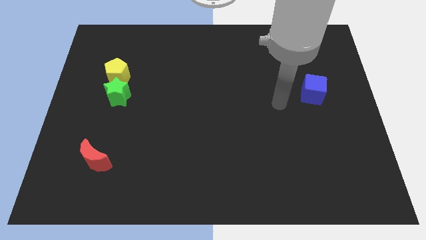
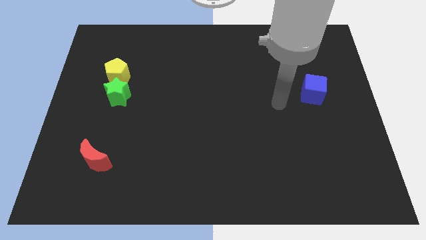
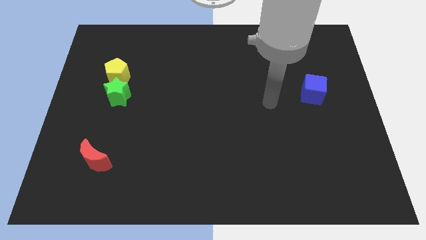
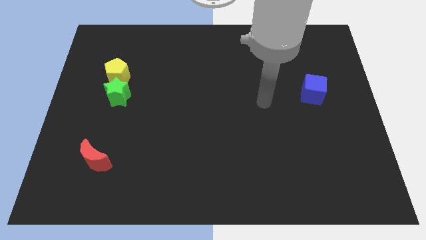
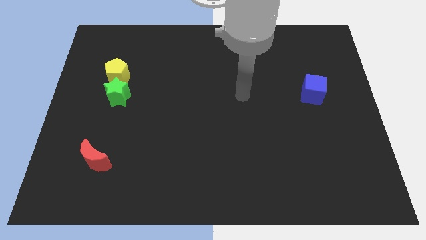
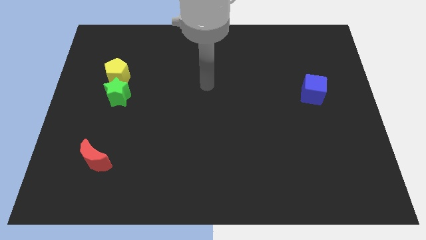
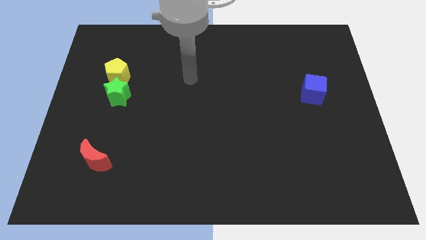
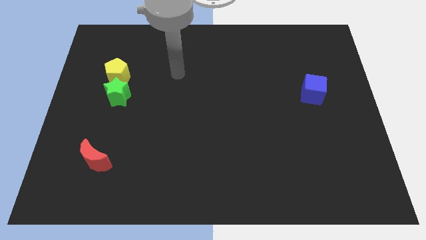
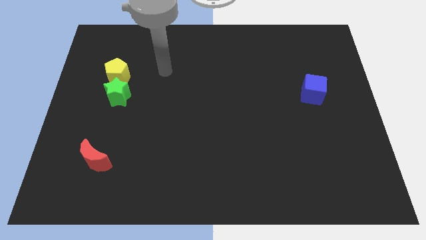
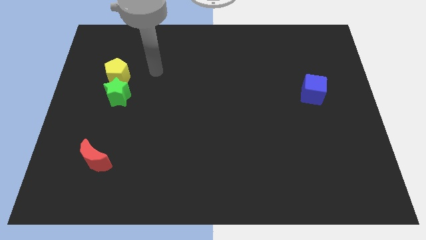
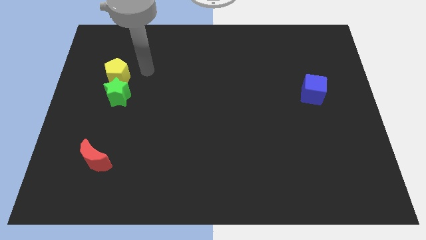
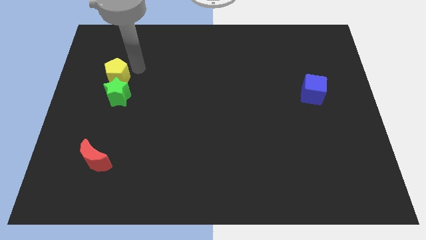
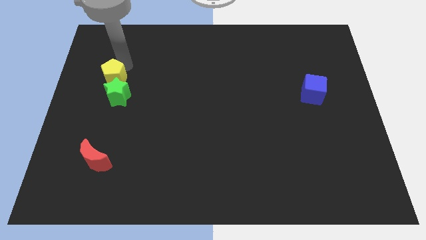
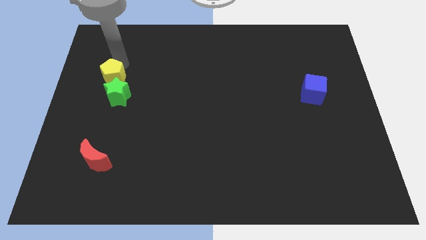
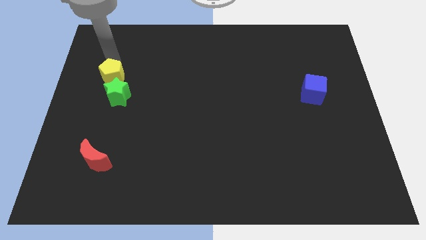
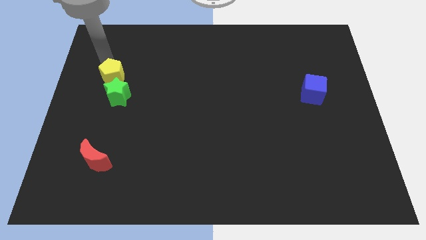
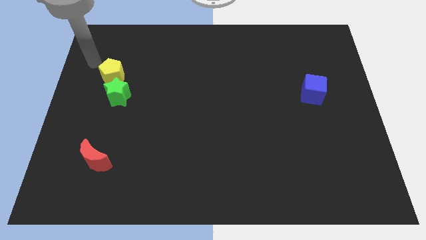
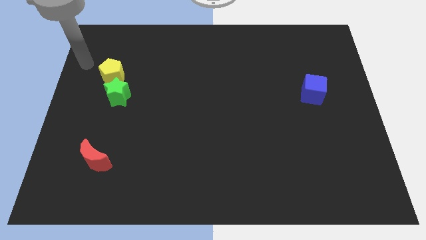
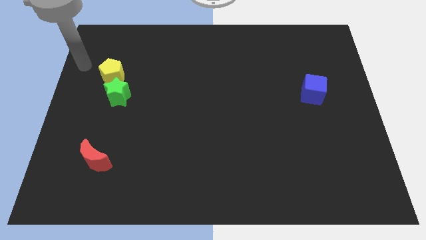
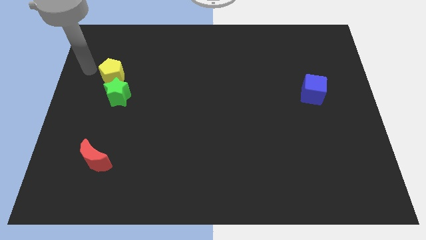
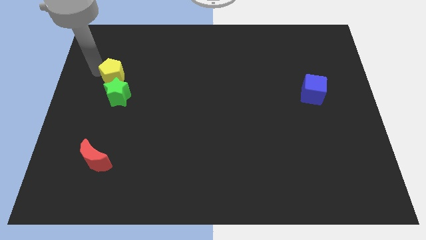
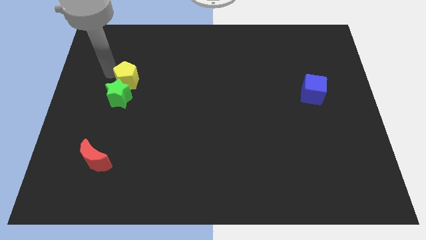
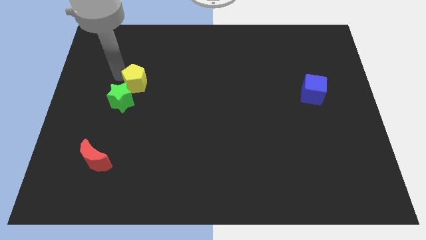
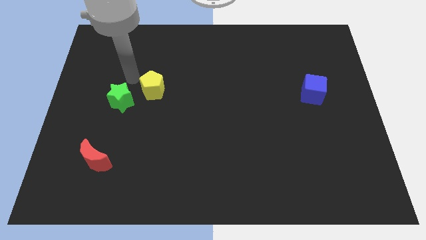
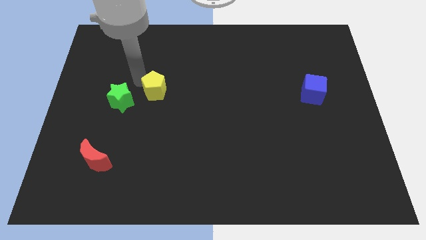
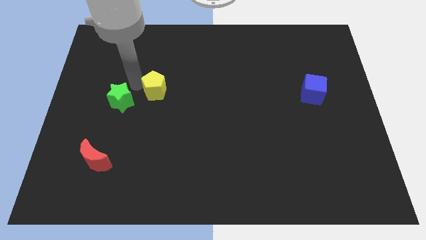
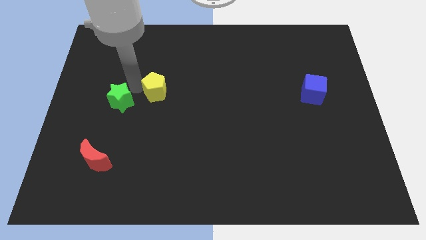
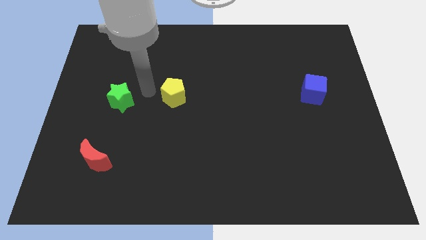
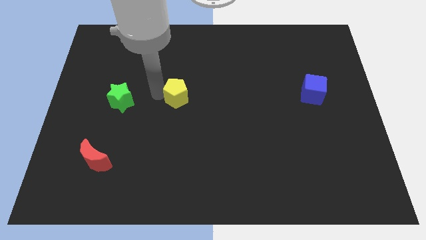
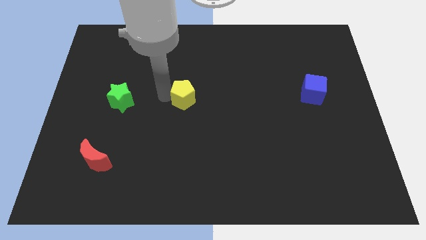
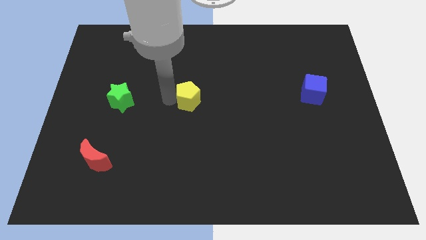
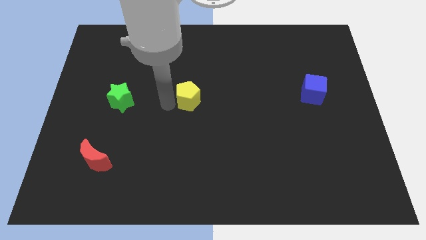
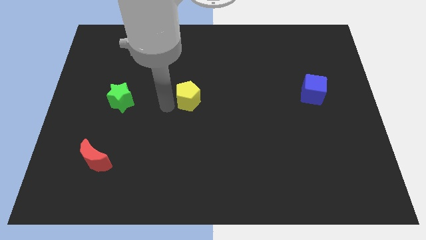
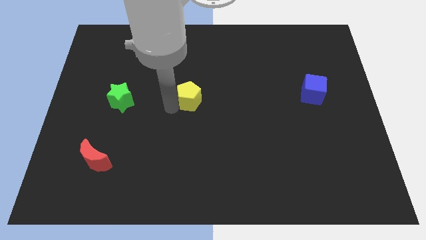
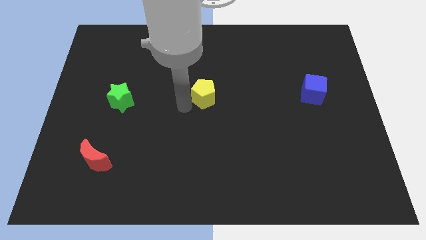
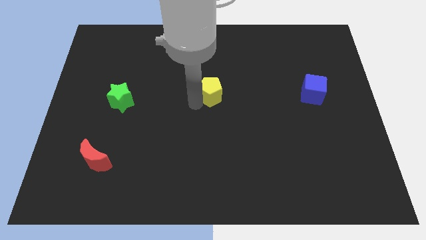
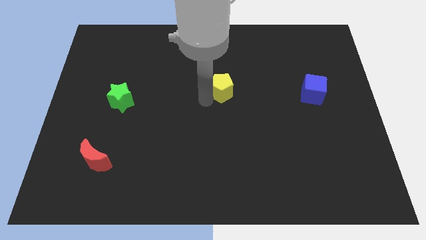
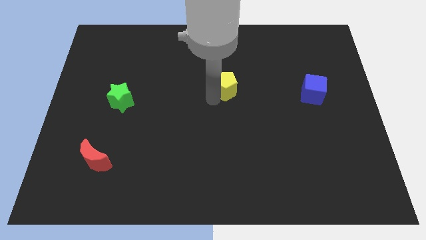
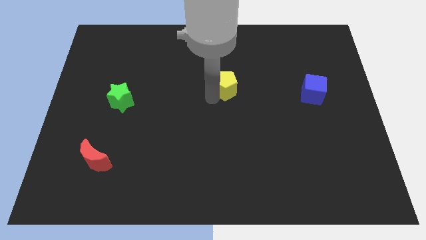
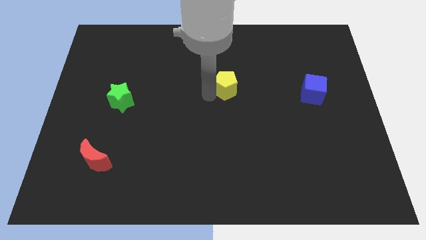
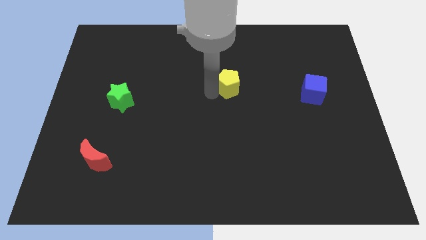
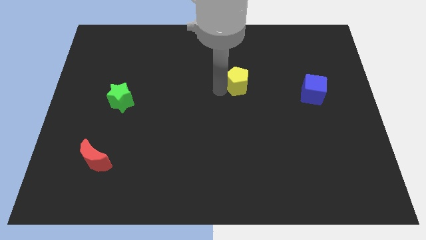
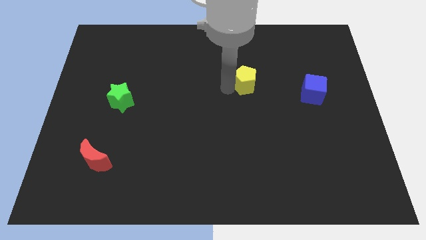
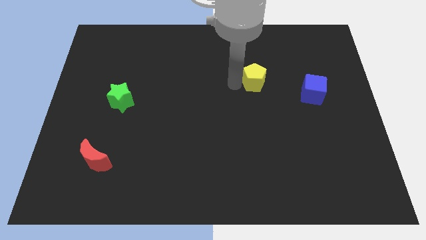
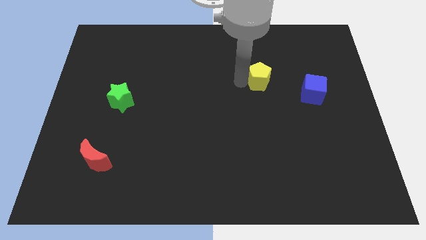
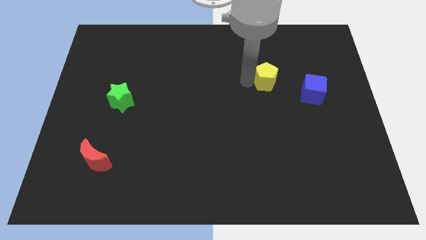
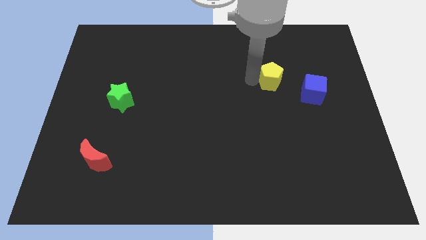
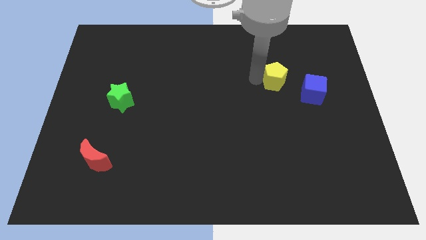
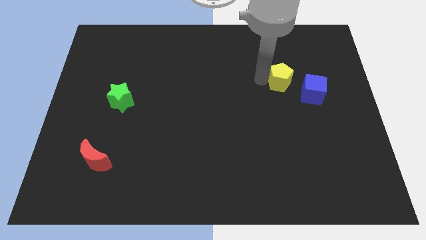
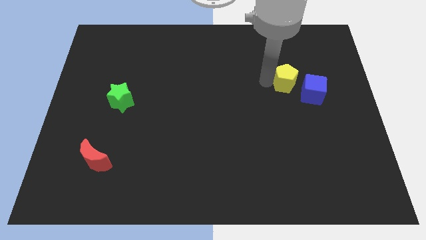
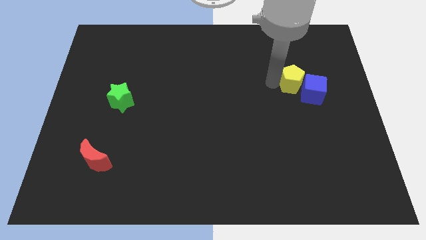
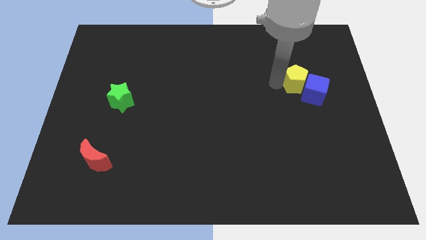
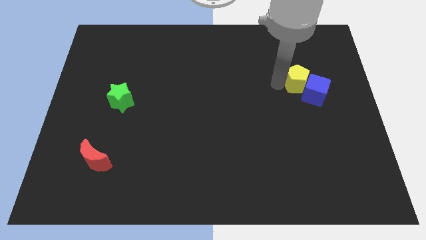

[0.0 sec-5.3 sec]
put the yellow pentagon to the cube

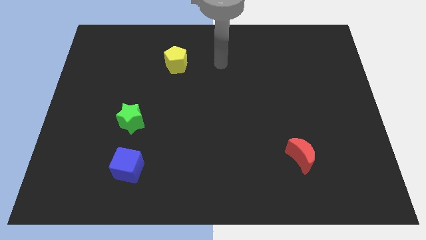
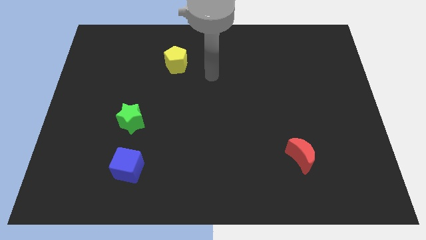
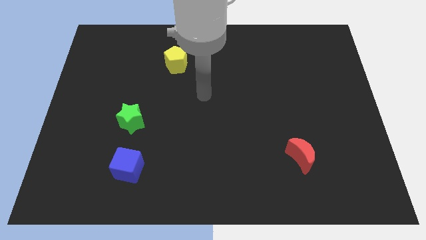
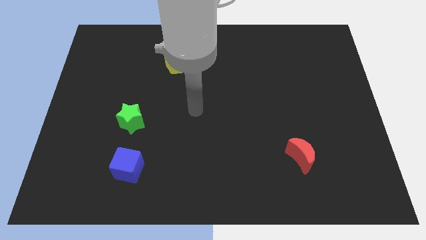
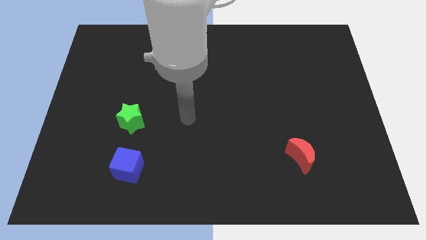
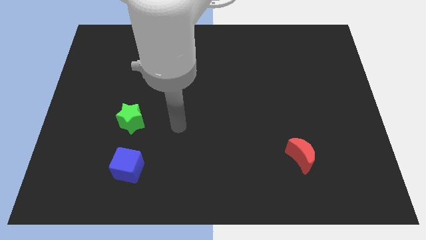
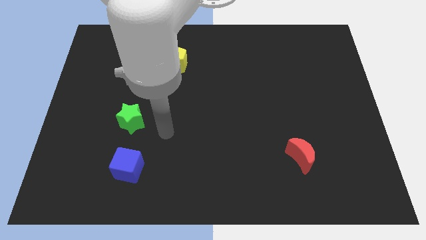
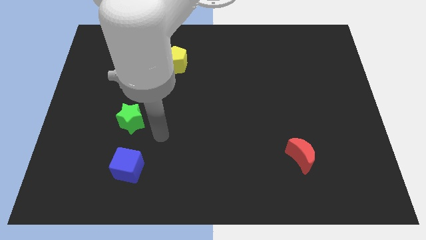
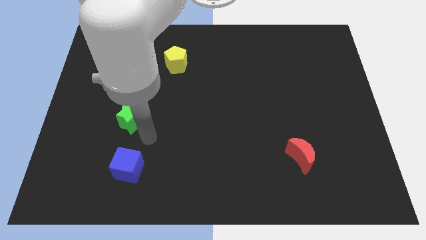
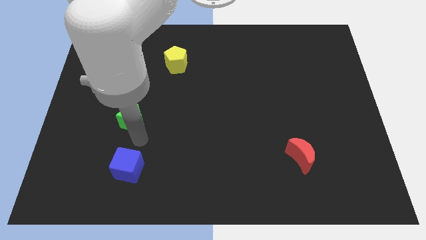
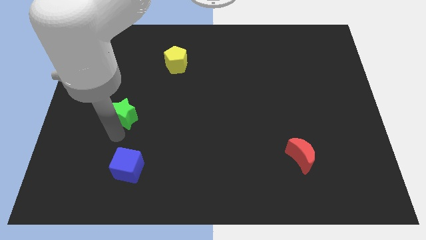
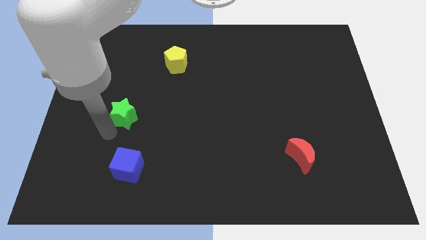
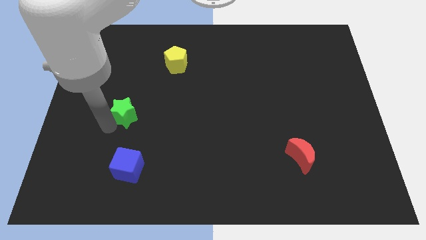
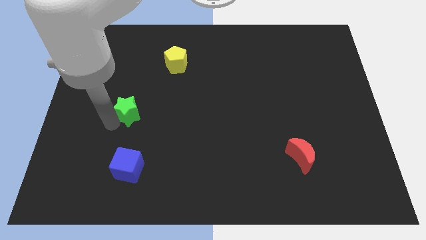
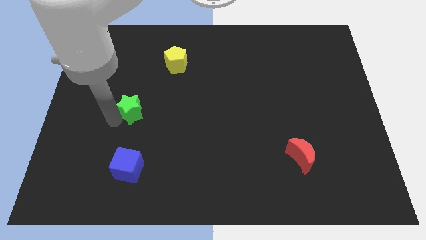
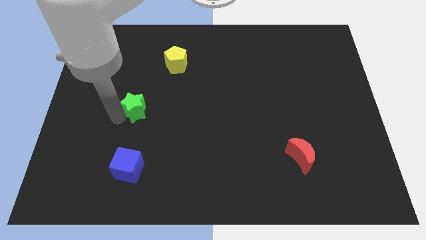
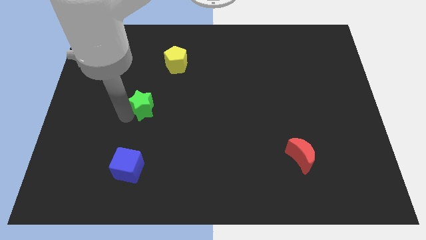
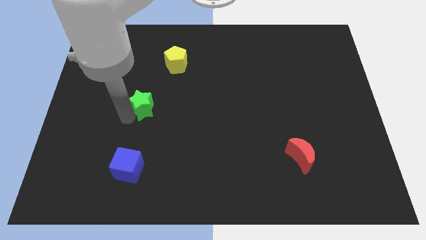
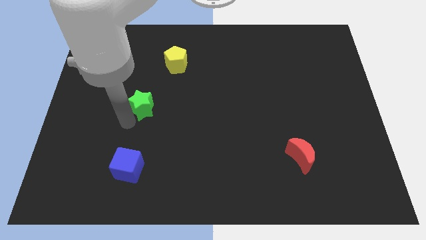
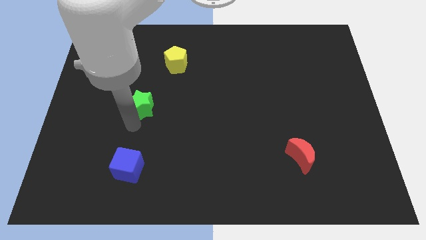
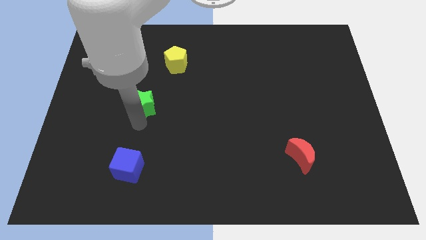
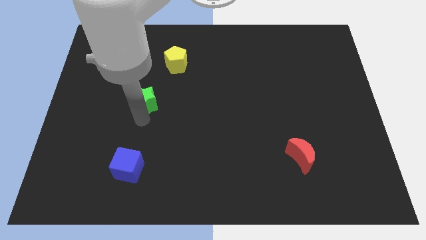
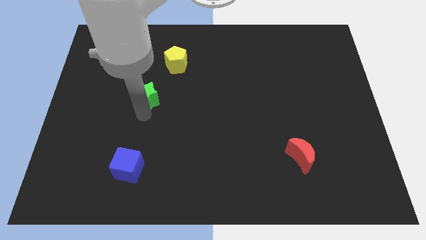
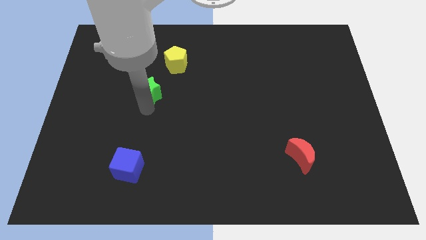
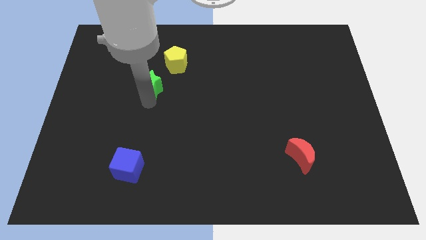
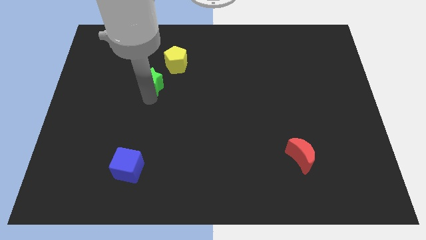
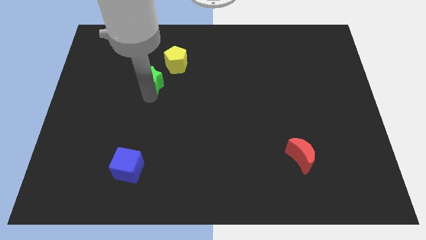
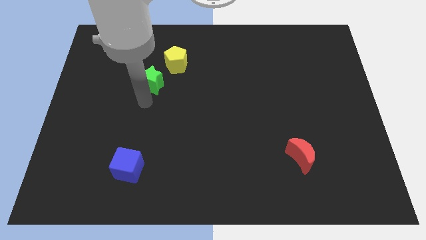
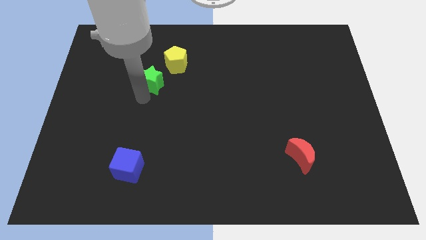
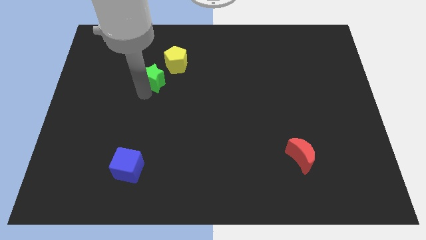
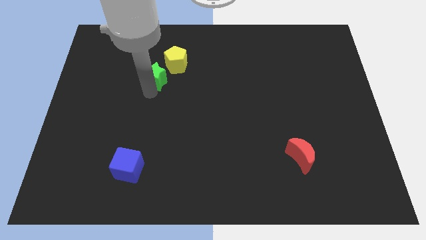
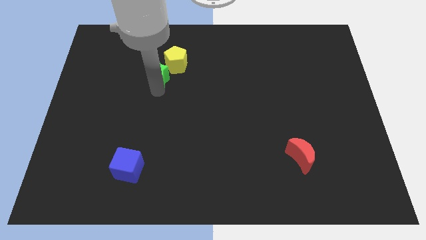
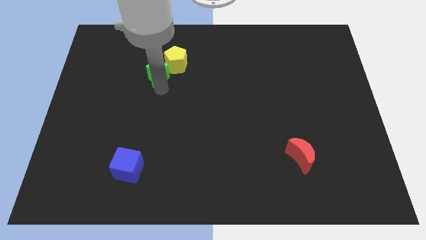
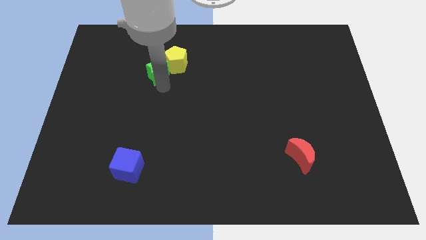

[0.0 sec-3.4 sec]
put the green block to the pentagon
